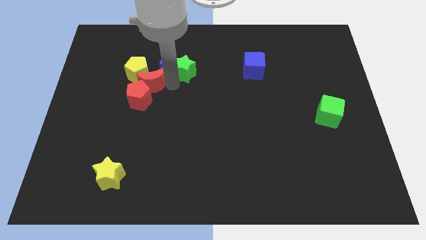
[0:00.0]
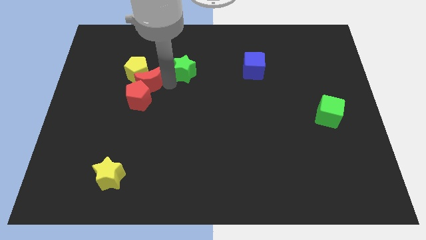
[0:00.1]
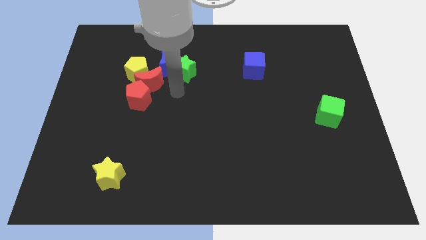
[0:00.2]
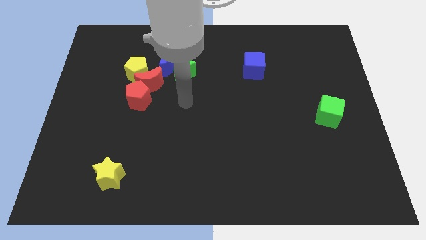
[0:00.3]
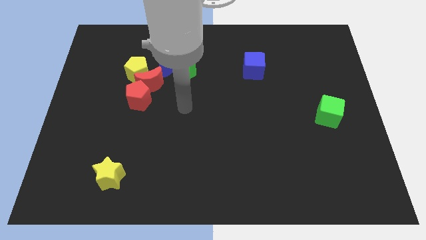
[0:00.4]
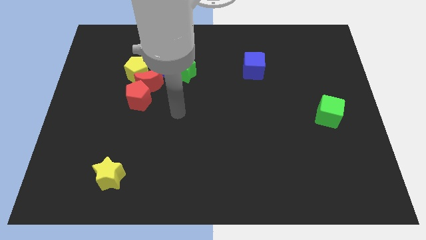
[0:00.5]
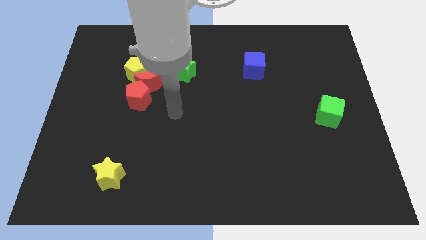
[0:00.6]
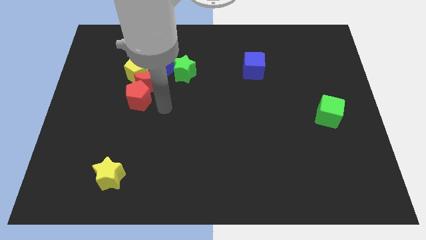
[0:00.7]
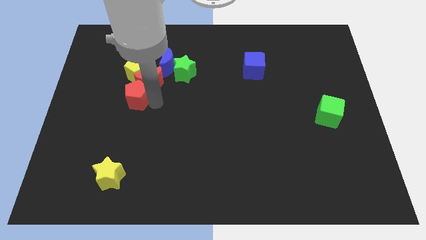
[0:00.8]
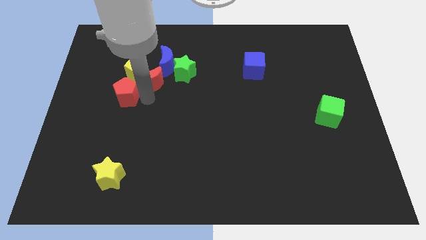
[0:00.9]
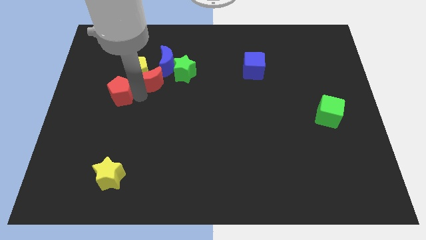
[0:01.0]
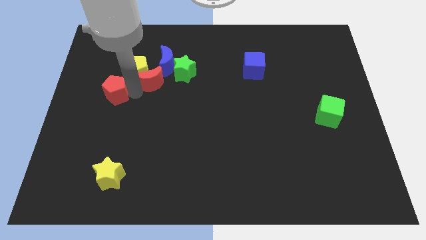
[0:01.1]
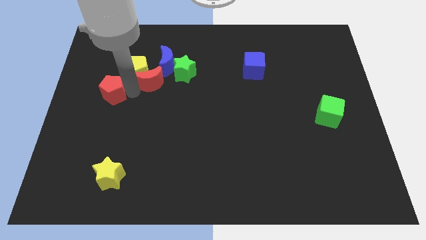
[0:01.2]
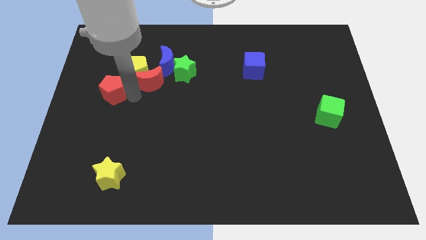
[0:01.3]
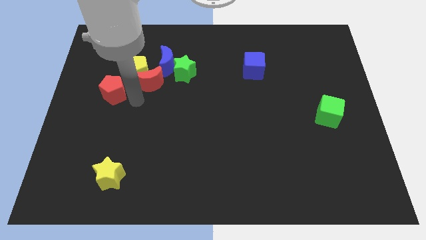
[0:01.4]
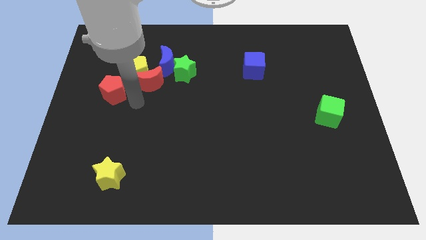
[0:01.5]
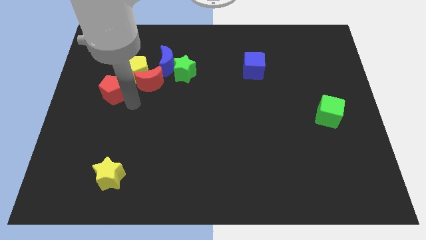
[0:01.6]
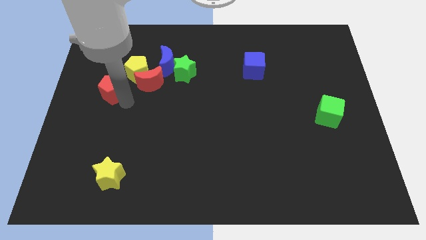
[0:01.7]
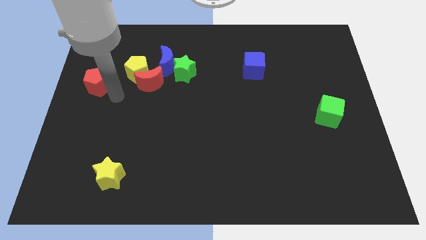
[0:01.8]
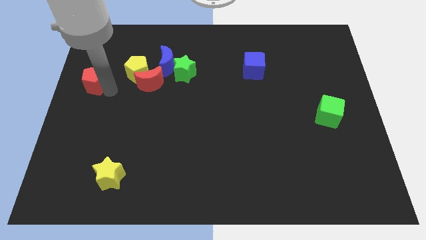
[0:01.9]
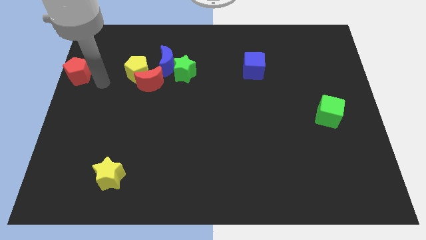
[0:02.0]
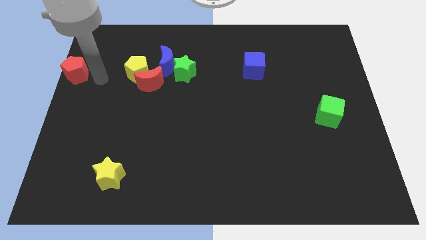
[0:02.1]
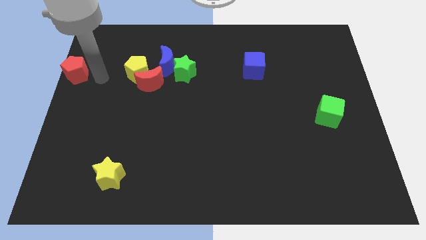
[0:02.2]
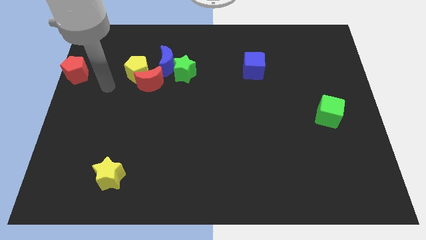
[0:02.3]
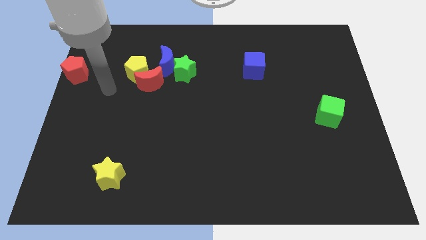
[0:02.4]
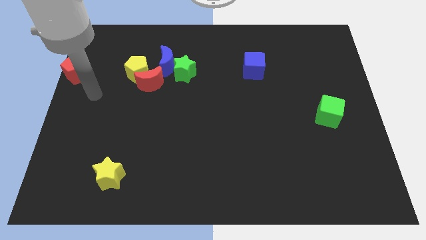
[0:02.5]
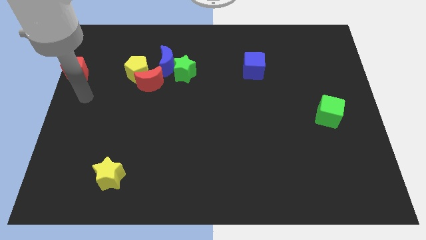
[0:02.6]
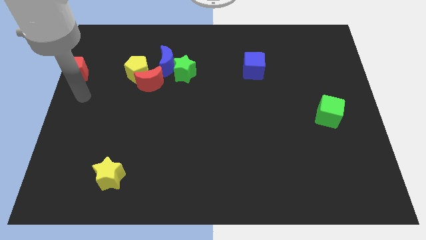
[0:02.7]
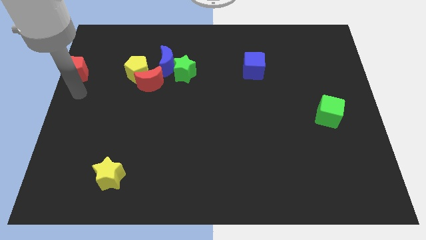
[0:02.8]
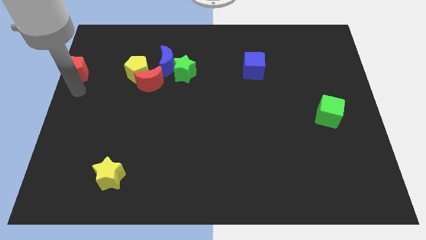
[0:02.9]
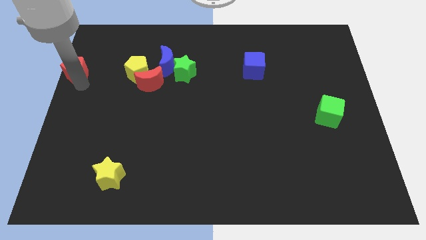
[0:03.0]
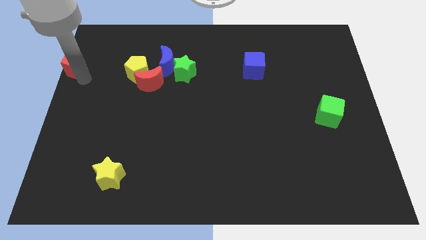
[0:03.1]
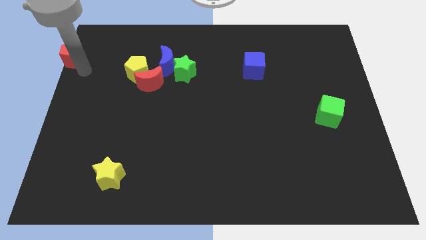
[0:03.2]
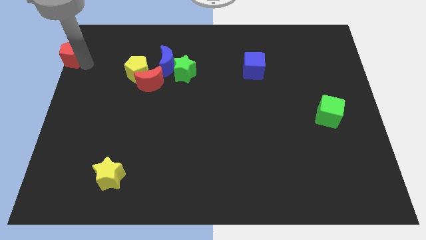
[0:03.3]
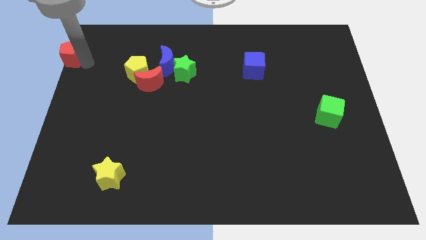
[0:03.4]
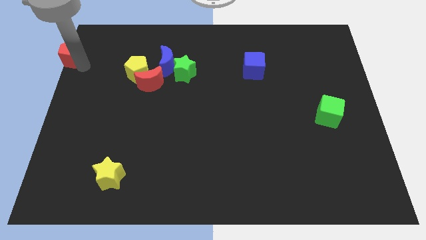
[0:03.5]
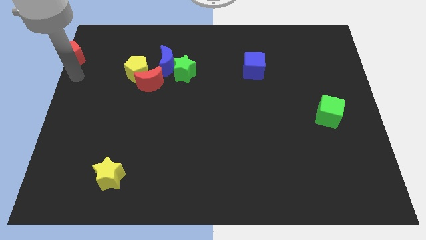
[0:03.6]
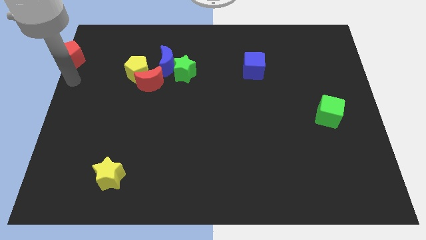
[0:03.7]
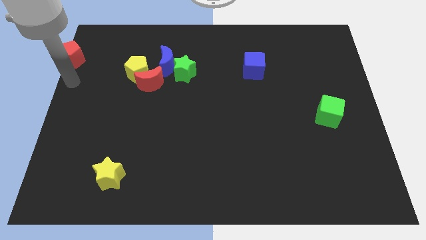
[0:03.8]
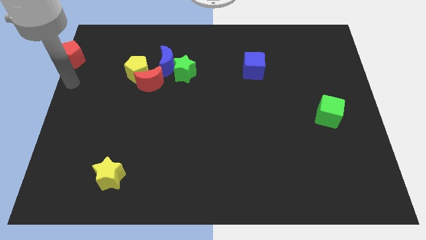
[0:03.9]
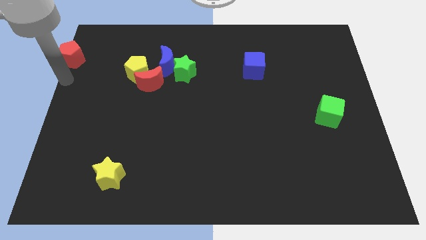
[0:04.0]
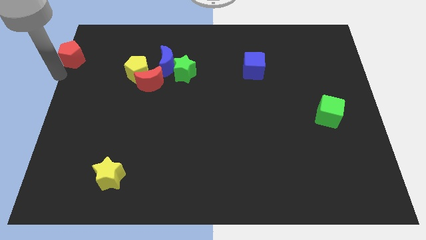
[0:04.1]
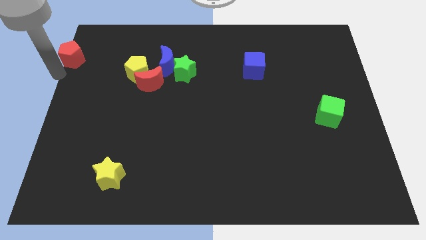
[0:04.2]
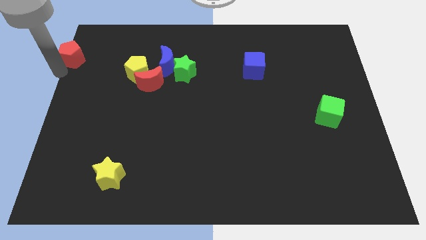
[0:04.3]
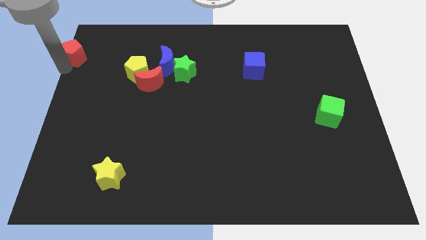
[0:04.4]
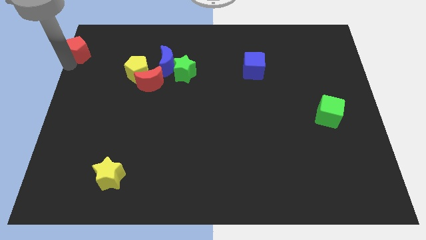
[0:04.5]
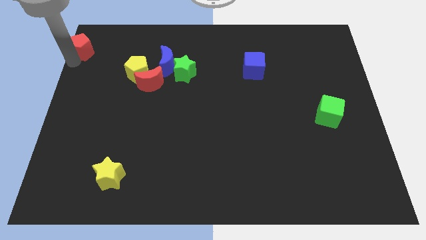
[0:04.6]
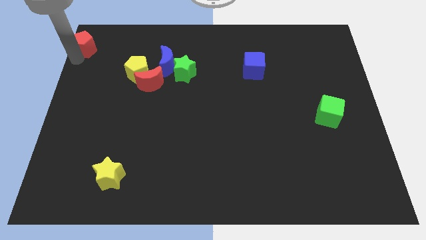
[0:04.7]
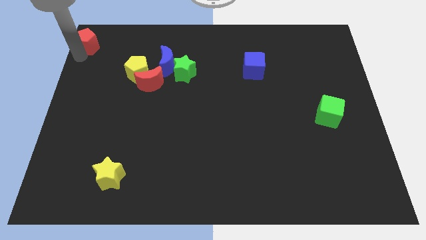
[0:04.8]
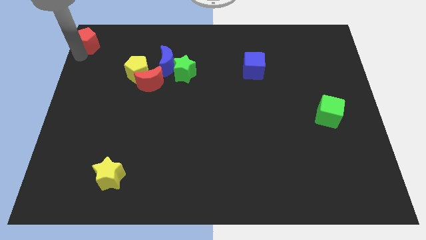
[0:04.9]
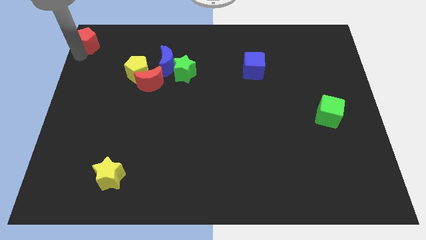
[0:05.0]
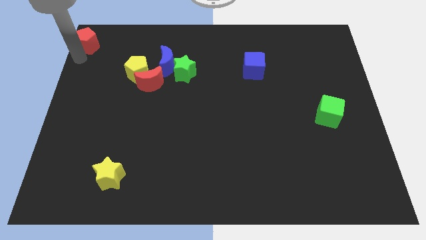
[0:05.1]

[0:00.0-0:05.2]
separate the red pentagon from the group of blocks

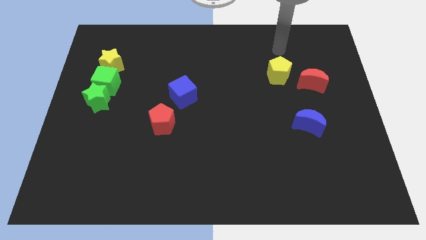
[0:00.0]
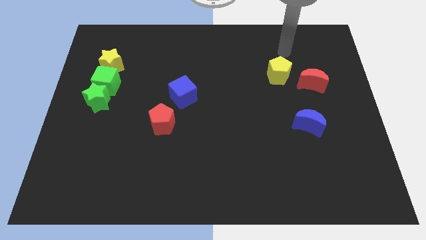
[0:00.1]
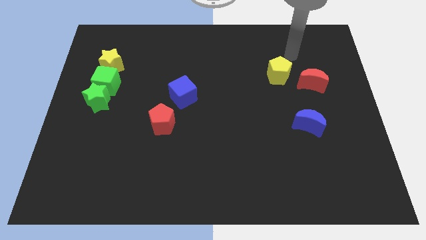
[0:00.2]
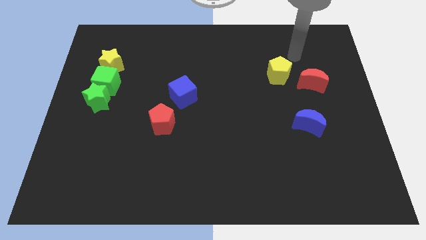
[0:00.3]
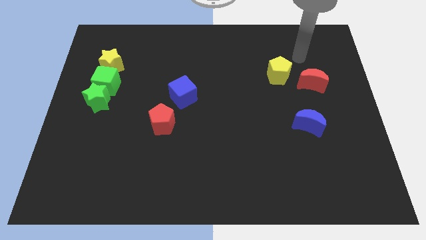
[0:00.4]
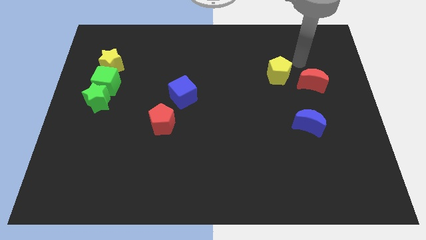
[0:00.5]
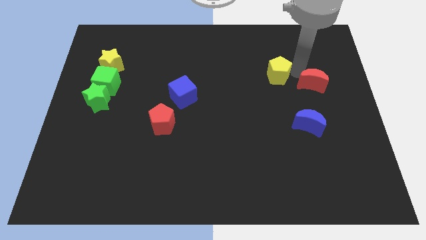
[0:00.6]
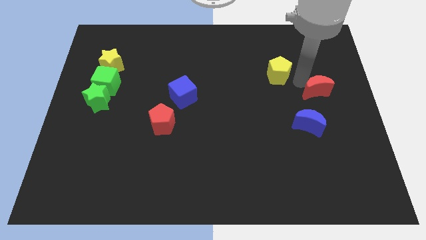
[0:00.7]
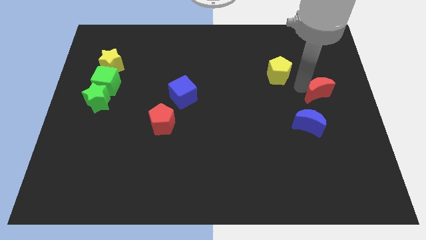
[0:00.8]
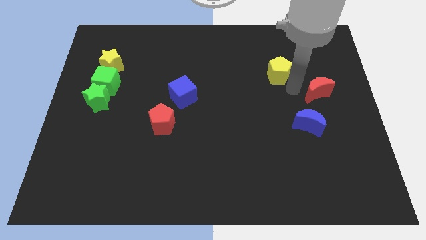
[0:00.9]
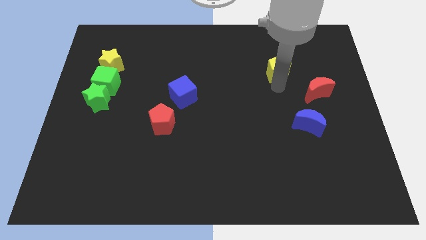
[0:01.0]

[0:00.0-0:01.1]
drag the red crescent diagonally to the bottom right of the yellow pentagon

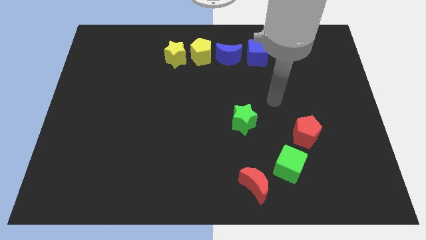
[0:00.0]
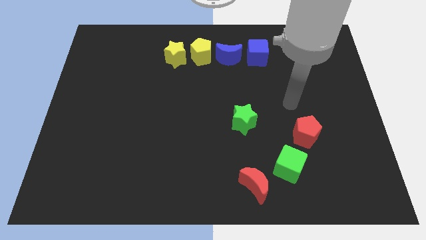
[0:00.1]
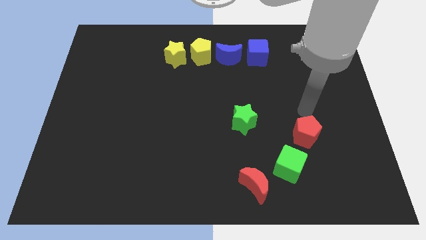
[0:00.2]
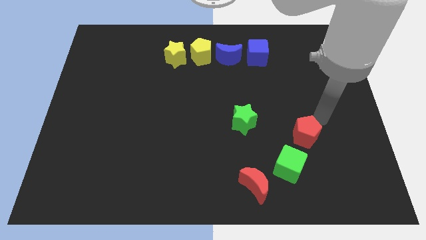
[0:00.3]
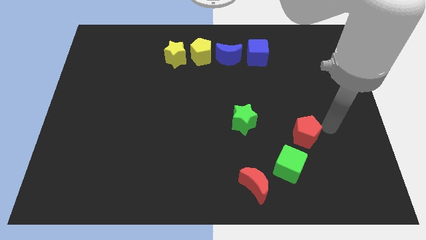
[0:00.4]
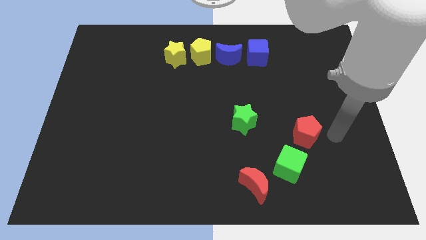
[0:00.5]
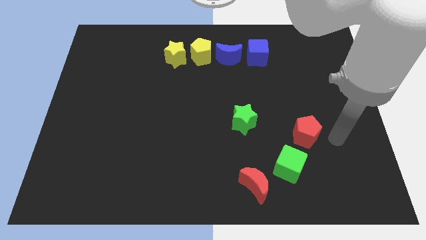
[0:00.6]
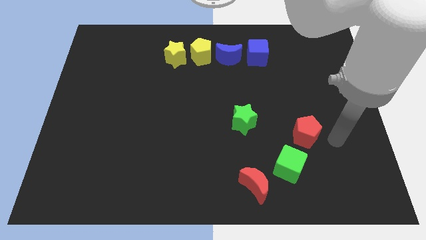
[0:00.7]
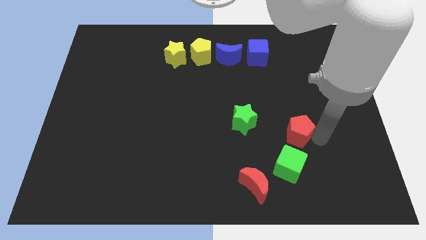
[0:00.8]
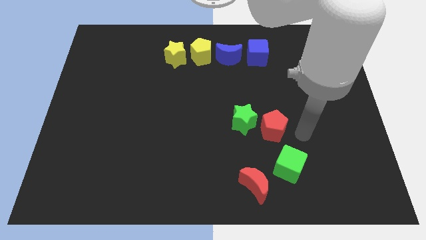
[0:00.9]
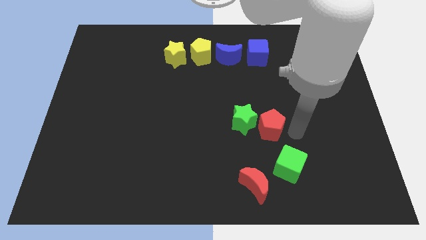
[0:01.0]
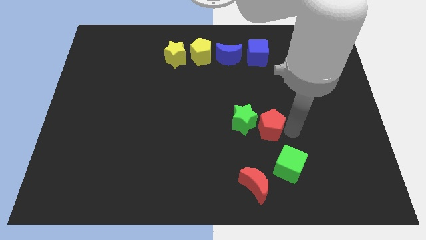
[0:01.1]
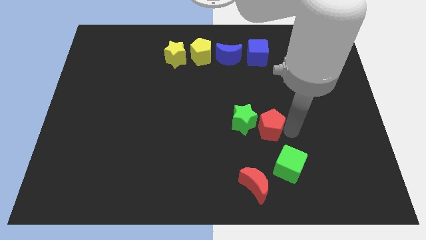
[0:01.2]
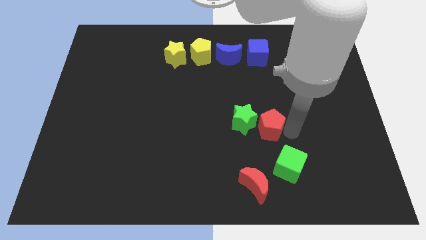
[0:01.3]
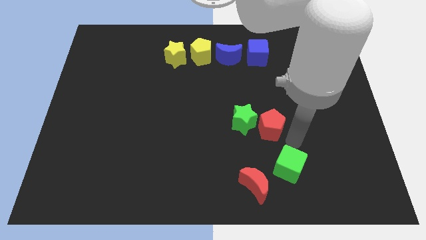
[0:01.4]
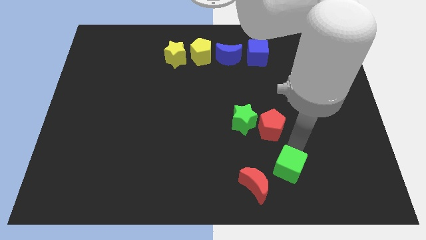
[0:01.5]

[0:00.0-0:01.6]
slide the red pentagon into the green star

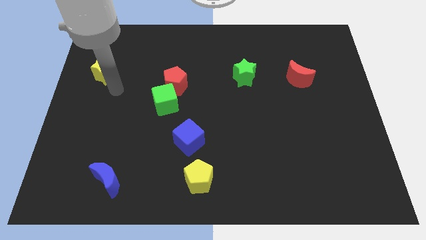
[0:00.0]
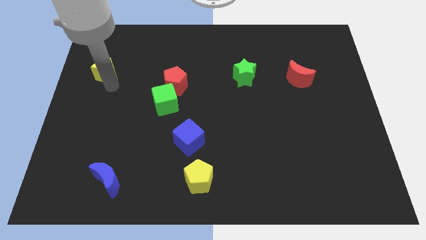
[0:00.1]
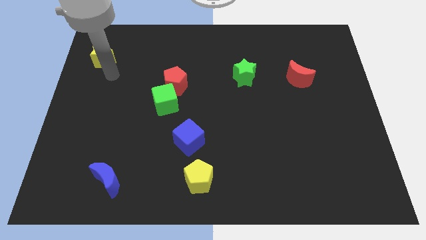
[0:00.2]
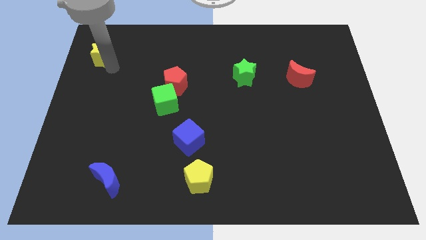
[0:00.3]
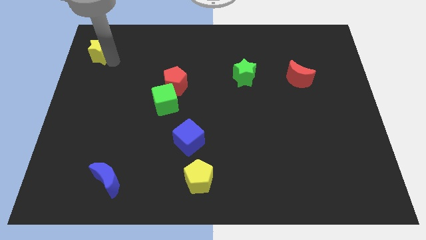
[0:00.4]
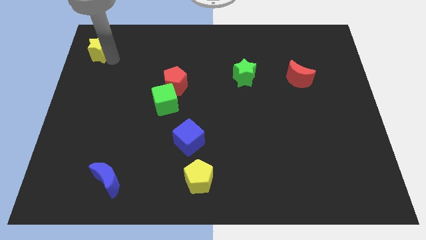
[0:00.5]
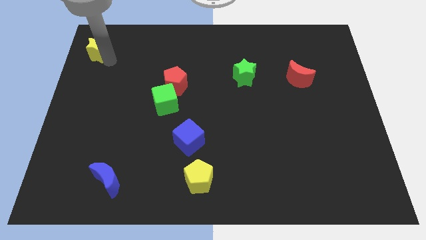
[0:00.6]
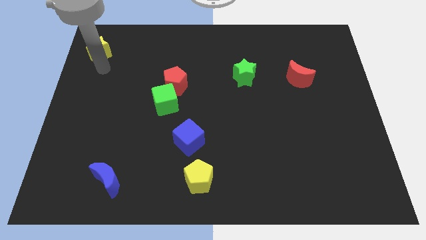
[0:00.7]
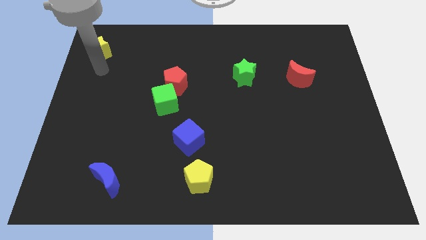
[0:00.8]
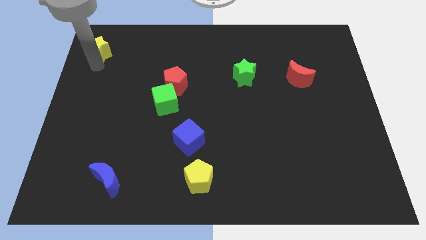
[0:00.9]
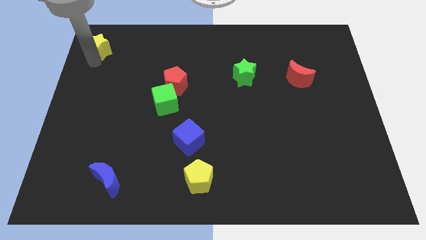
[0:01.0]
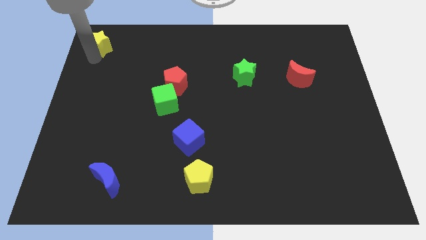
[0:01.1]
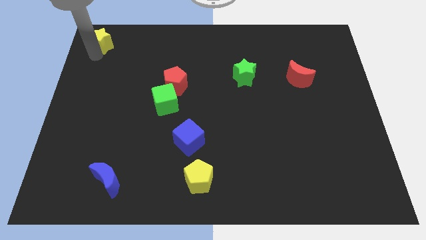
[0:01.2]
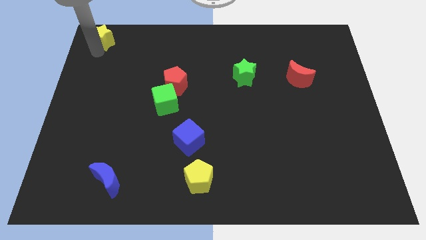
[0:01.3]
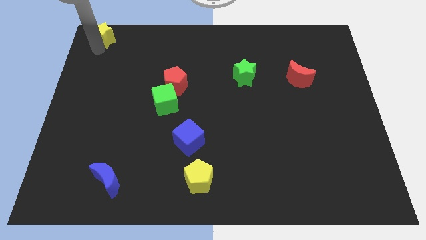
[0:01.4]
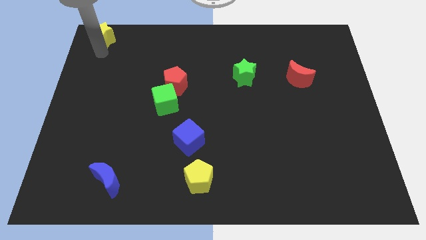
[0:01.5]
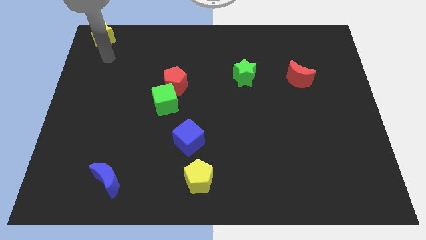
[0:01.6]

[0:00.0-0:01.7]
move yellow star to the top left side
